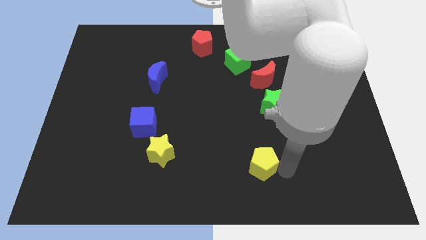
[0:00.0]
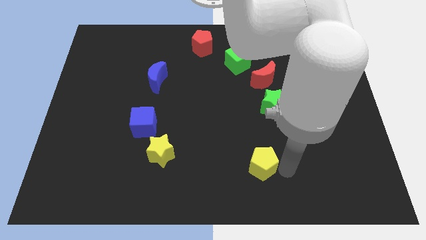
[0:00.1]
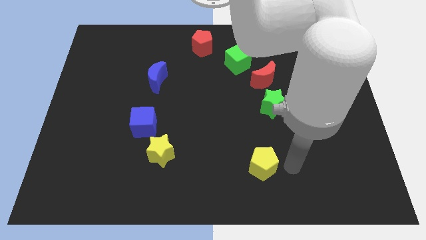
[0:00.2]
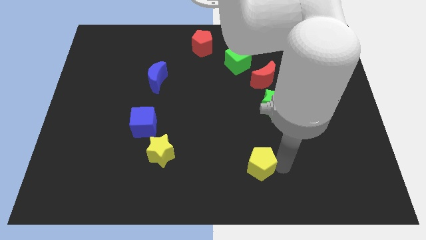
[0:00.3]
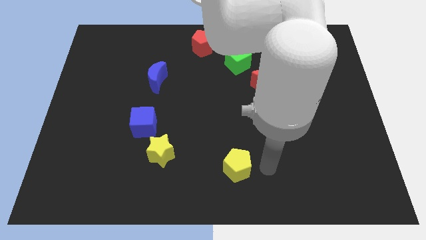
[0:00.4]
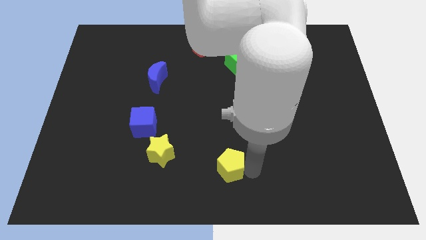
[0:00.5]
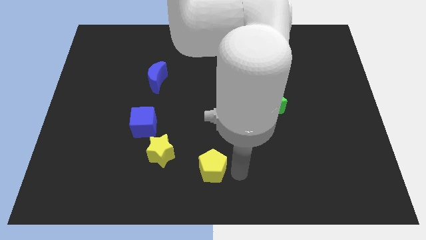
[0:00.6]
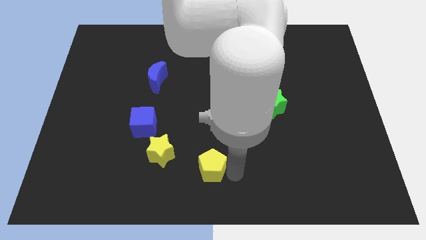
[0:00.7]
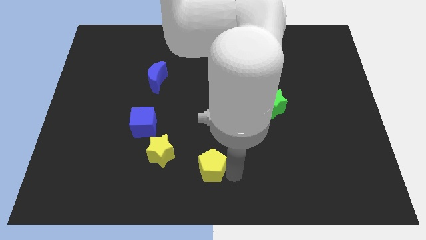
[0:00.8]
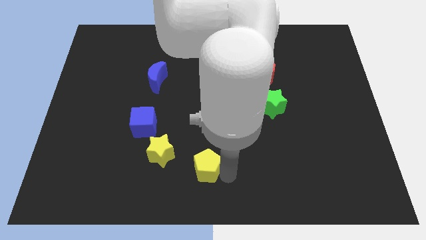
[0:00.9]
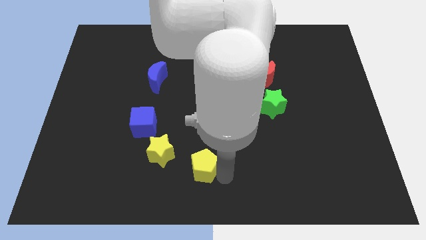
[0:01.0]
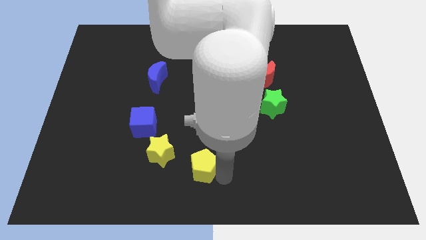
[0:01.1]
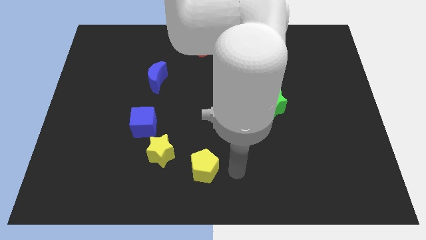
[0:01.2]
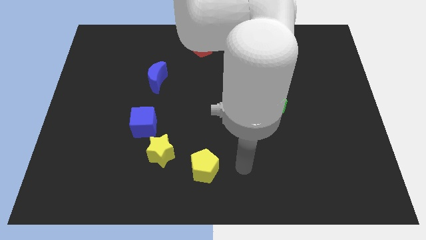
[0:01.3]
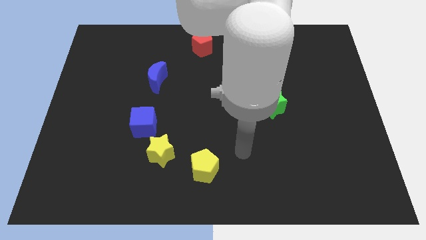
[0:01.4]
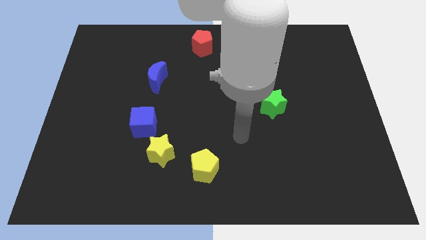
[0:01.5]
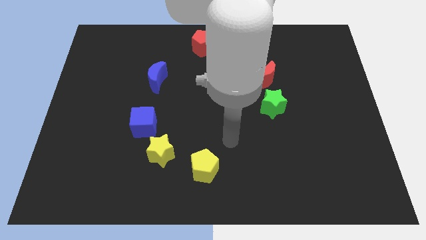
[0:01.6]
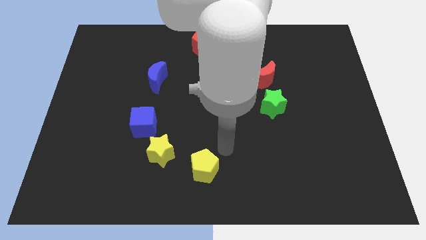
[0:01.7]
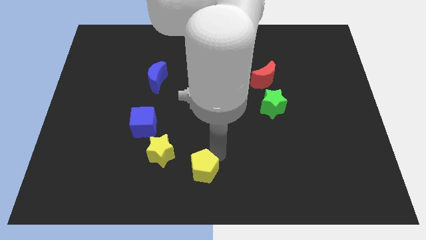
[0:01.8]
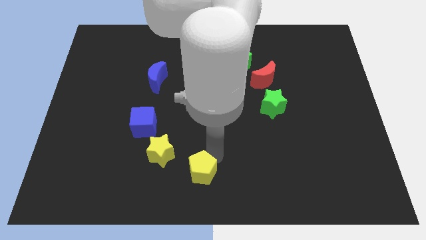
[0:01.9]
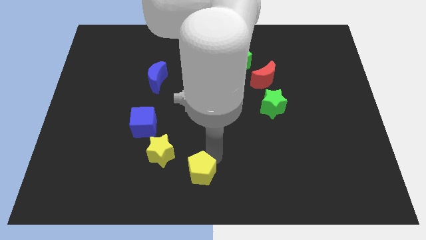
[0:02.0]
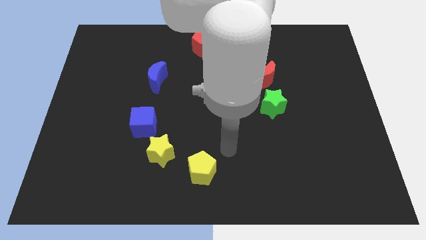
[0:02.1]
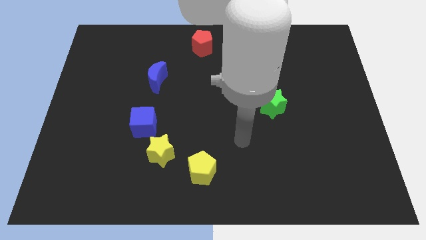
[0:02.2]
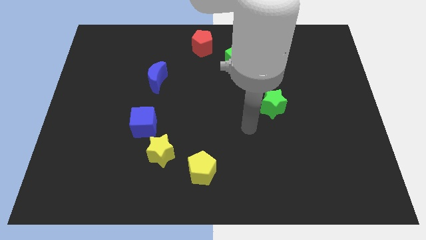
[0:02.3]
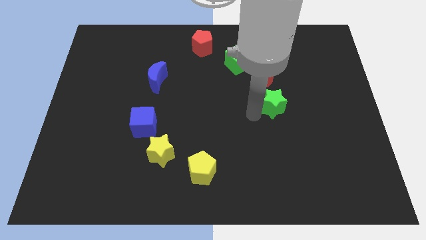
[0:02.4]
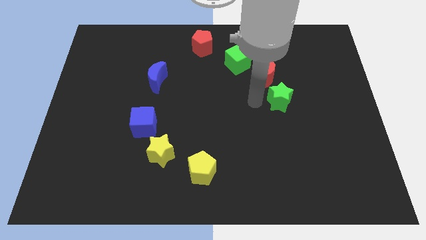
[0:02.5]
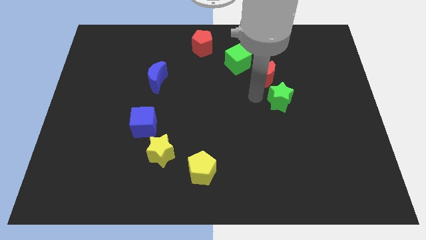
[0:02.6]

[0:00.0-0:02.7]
place yellow pentagon right to yellow star

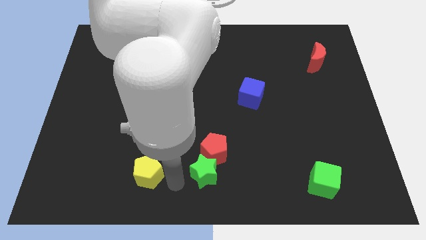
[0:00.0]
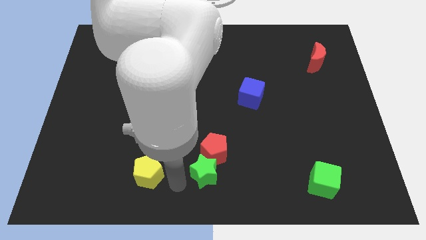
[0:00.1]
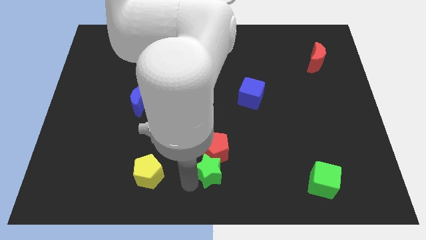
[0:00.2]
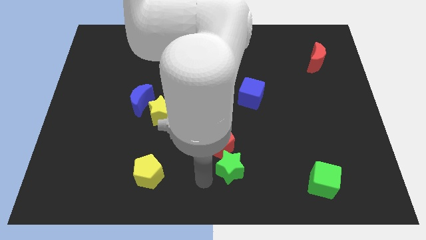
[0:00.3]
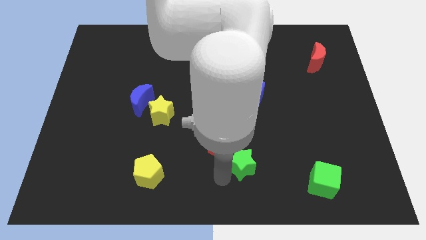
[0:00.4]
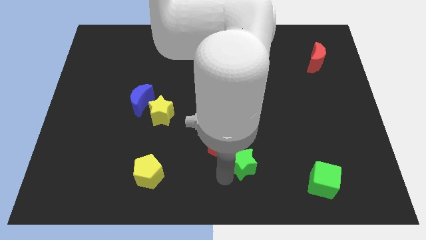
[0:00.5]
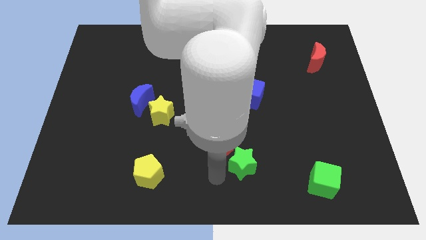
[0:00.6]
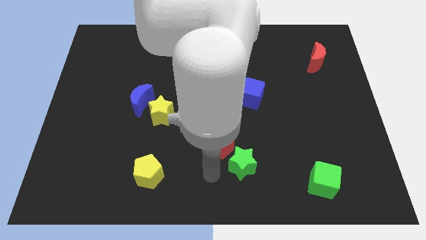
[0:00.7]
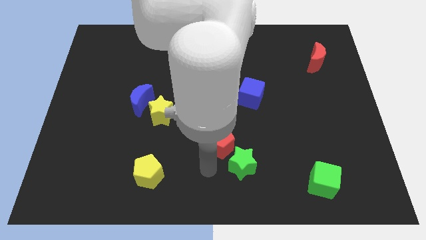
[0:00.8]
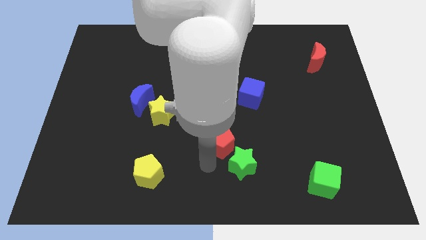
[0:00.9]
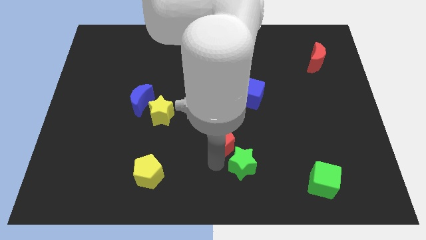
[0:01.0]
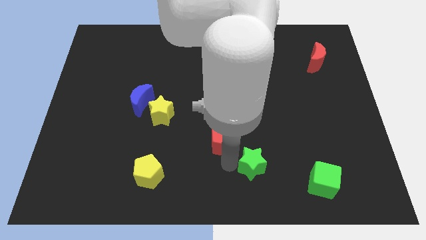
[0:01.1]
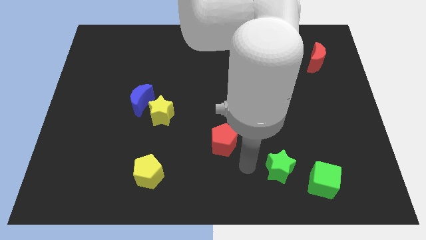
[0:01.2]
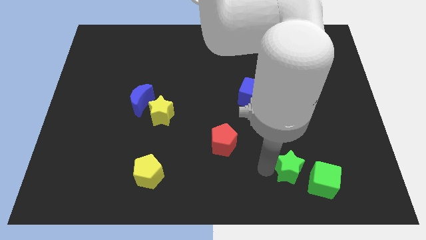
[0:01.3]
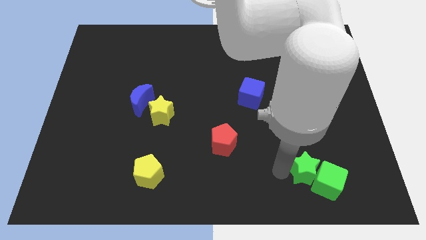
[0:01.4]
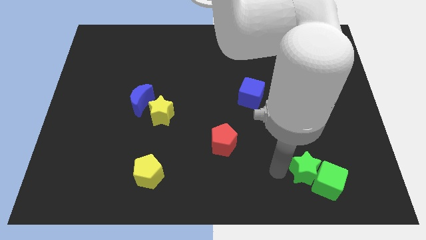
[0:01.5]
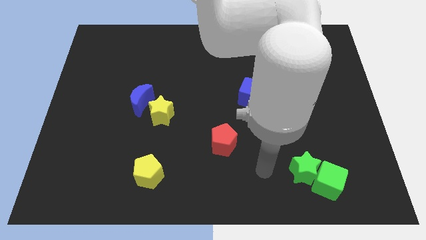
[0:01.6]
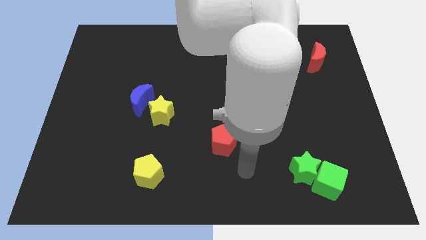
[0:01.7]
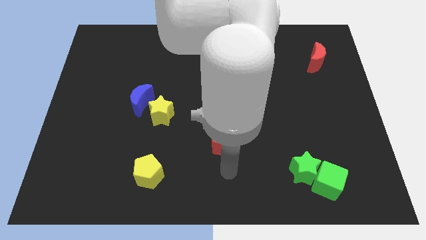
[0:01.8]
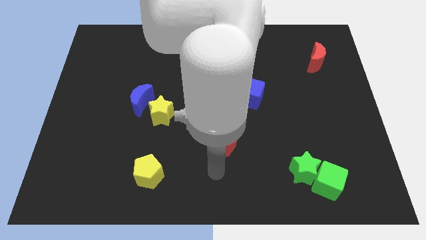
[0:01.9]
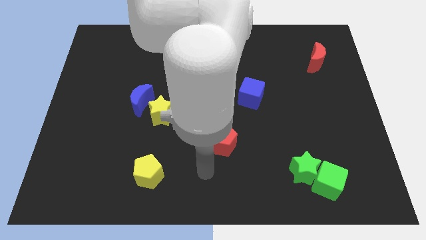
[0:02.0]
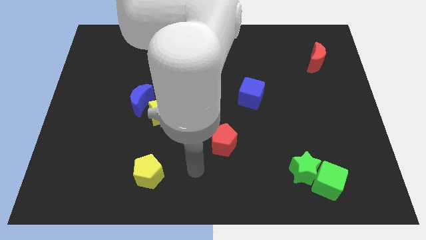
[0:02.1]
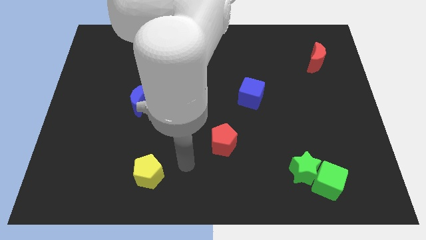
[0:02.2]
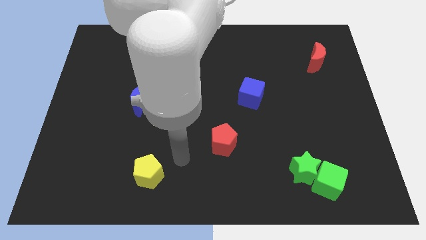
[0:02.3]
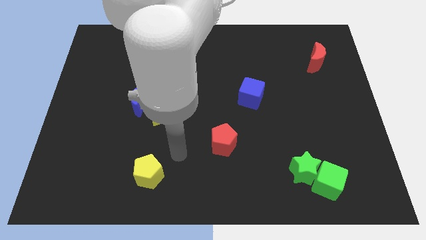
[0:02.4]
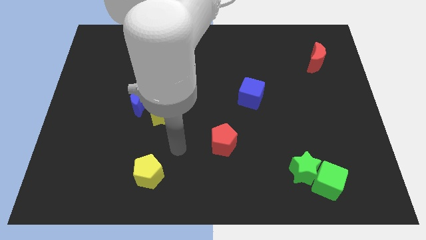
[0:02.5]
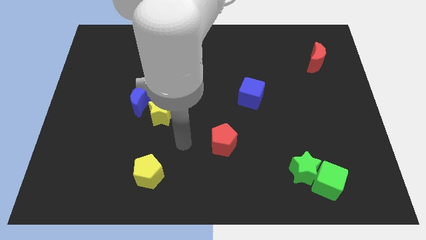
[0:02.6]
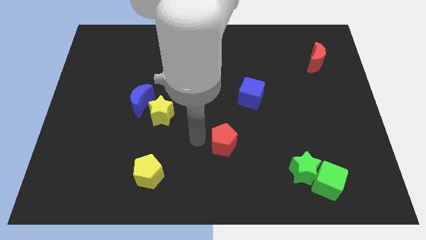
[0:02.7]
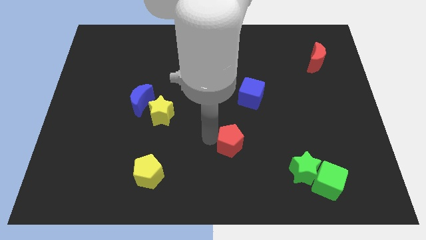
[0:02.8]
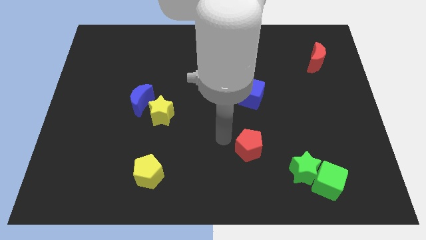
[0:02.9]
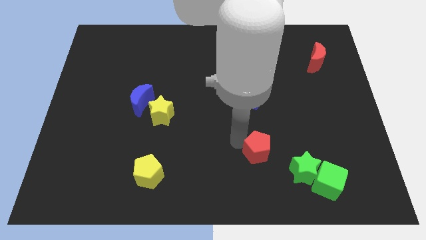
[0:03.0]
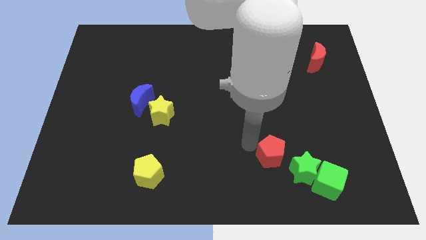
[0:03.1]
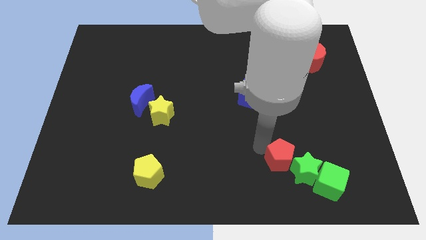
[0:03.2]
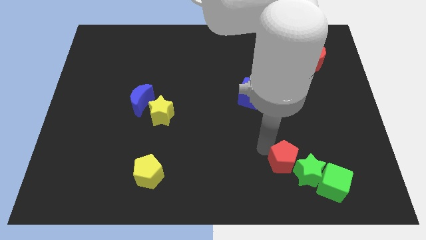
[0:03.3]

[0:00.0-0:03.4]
push the green stared pentagon into the green cube

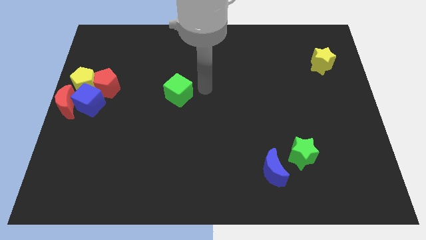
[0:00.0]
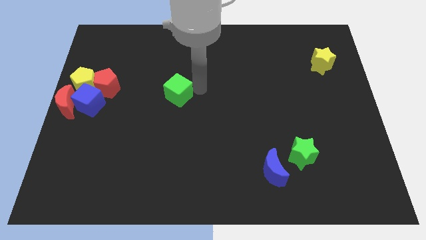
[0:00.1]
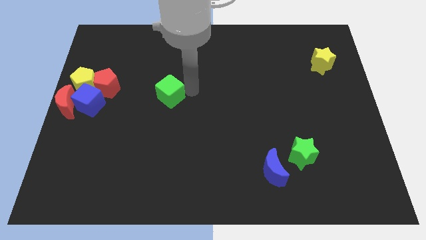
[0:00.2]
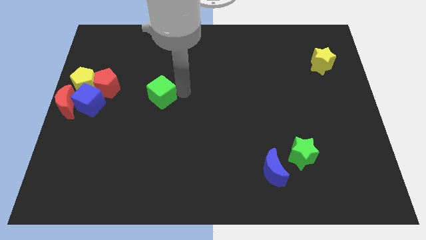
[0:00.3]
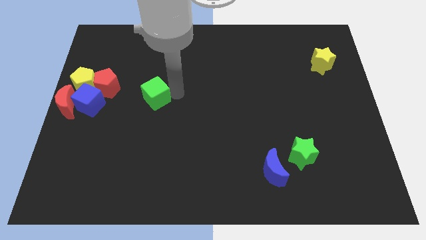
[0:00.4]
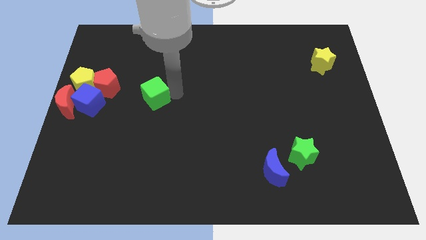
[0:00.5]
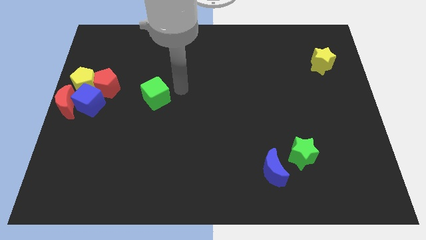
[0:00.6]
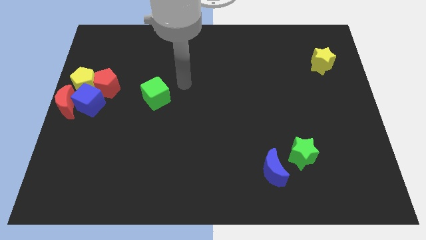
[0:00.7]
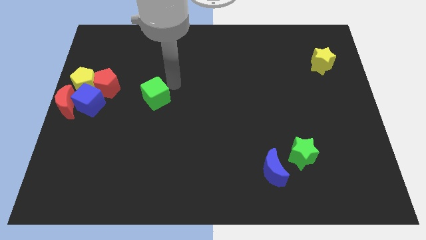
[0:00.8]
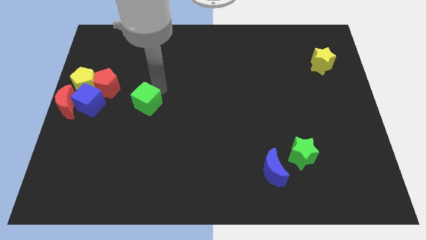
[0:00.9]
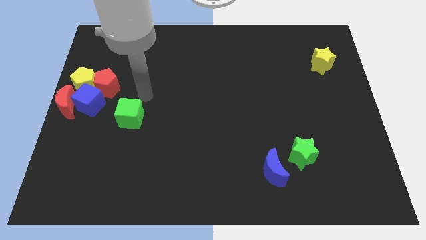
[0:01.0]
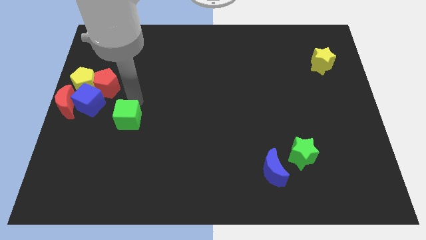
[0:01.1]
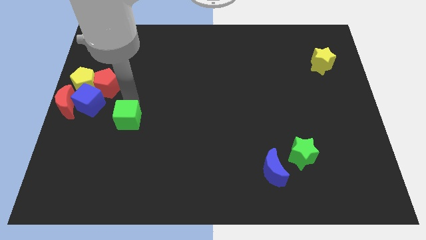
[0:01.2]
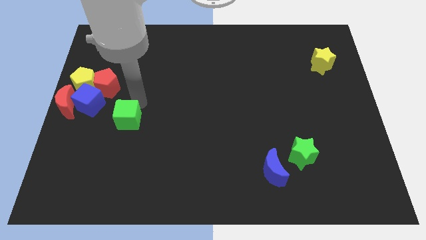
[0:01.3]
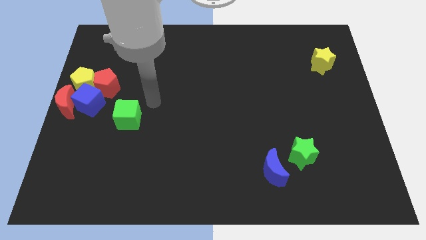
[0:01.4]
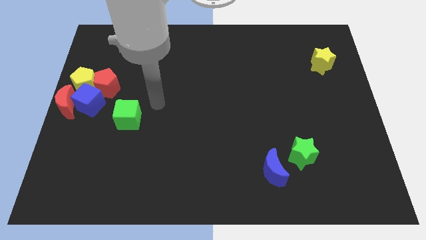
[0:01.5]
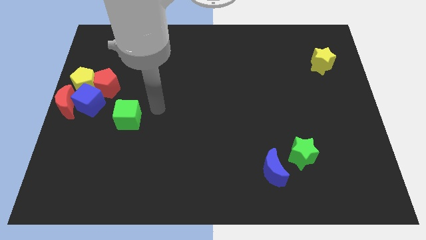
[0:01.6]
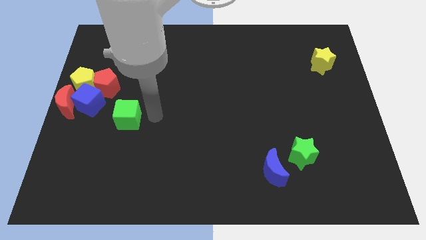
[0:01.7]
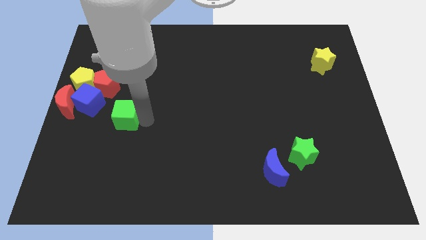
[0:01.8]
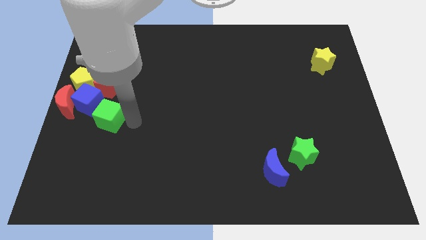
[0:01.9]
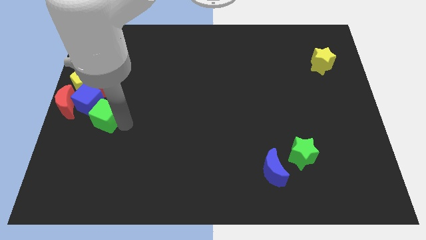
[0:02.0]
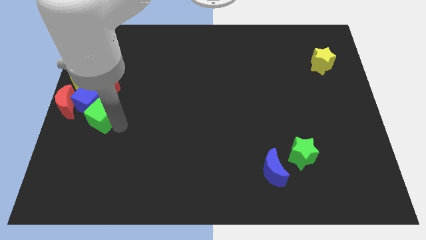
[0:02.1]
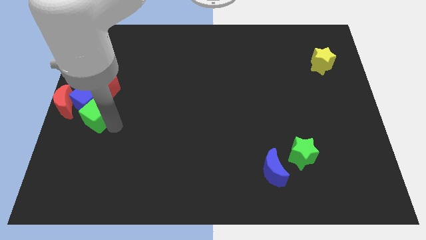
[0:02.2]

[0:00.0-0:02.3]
move the green cube towards the blue cube

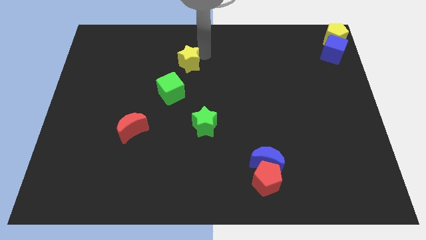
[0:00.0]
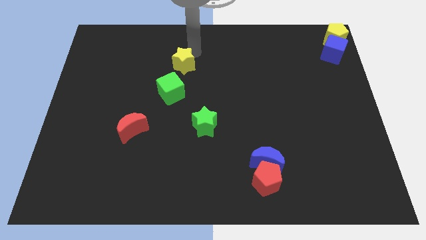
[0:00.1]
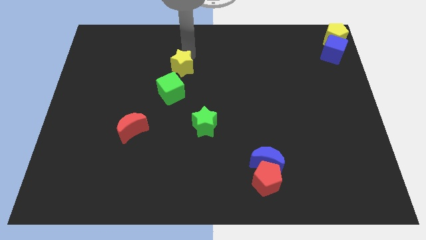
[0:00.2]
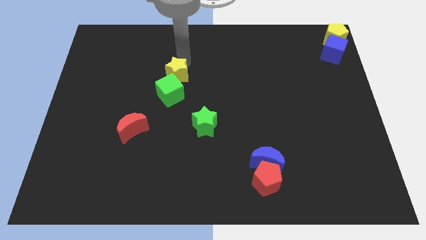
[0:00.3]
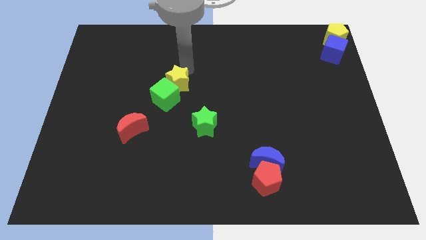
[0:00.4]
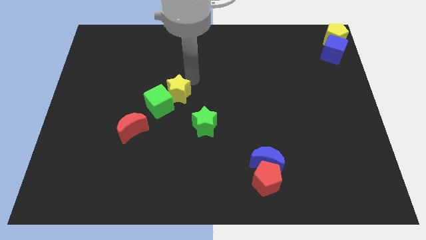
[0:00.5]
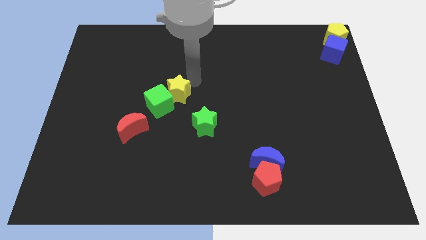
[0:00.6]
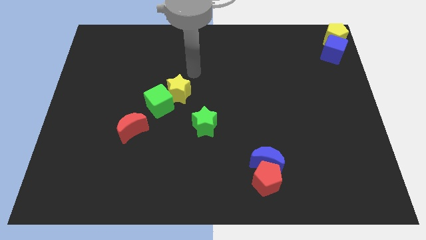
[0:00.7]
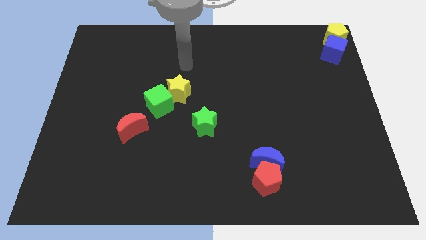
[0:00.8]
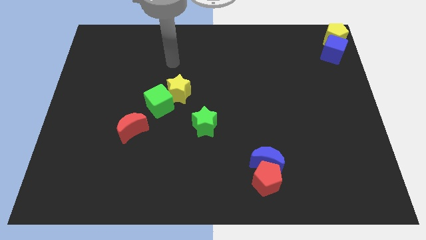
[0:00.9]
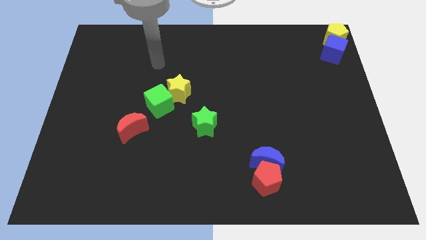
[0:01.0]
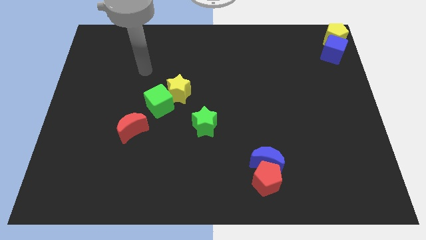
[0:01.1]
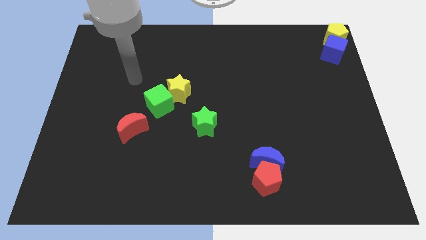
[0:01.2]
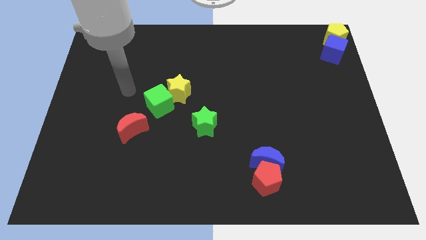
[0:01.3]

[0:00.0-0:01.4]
push the yellow star into the green cube on the left center of the board
